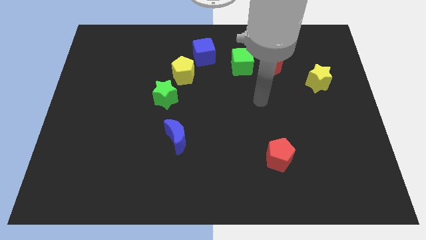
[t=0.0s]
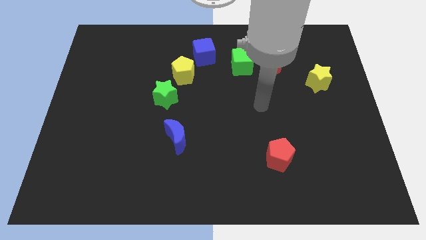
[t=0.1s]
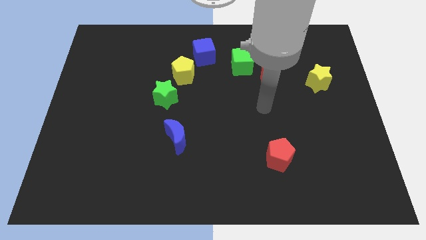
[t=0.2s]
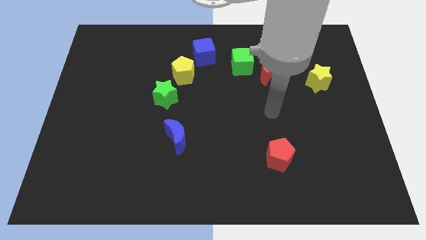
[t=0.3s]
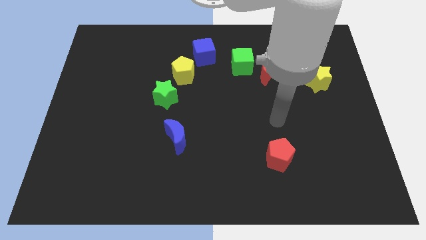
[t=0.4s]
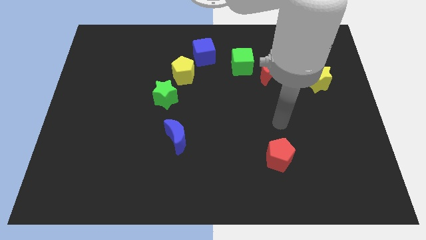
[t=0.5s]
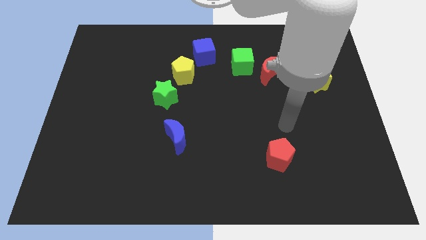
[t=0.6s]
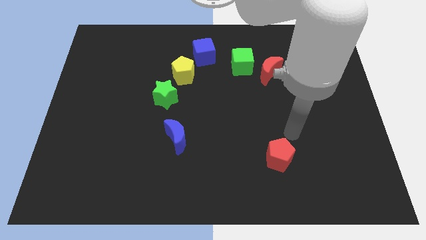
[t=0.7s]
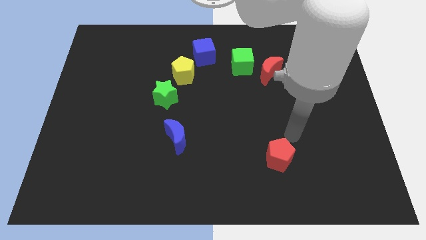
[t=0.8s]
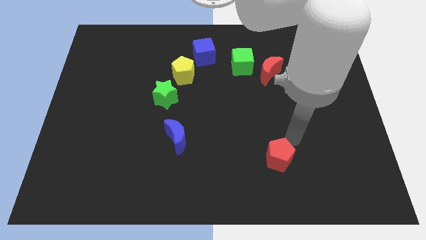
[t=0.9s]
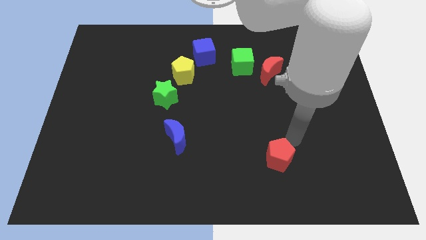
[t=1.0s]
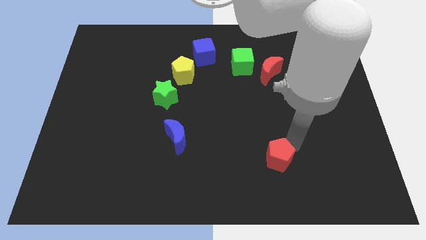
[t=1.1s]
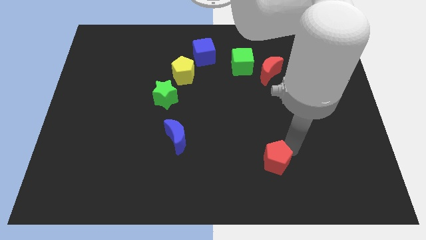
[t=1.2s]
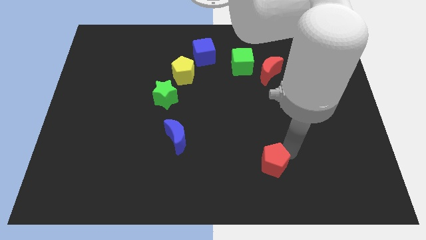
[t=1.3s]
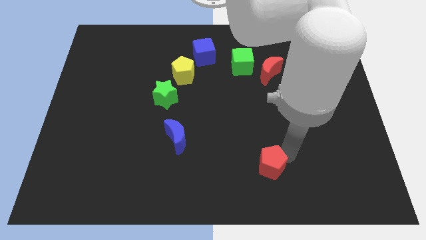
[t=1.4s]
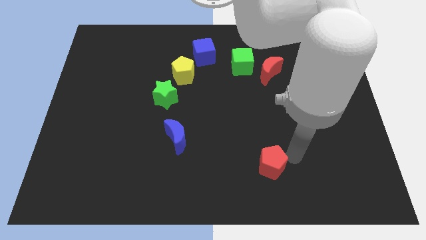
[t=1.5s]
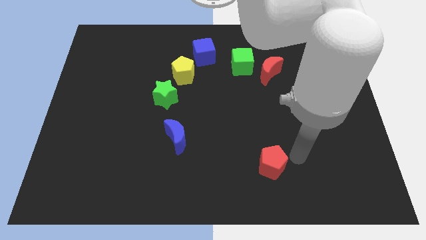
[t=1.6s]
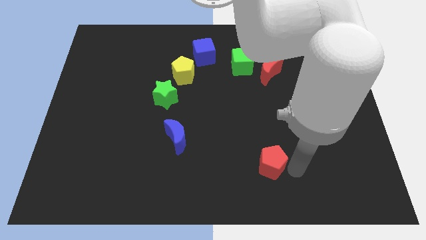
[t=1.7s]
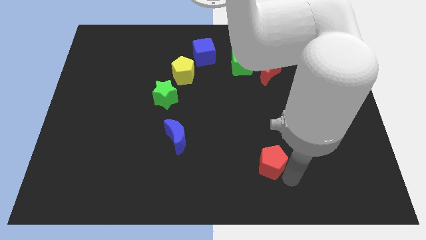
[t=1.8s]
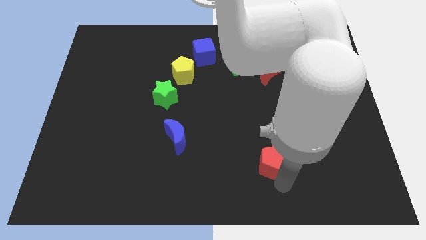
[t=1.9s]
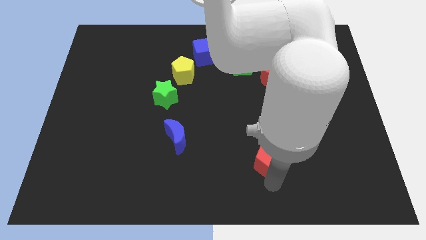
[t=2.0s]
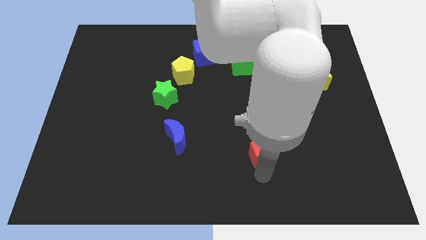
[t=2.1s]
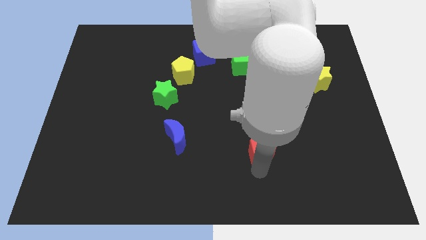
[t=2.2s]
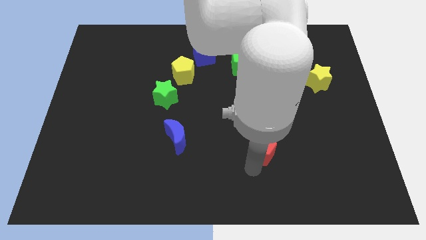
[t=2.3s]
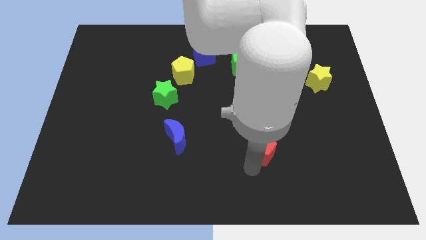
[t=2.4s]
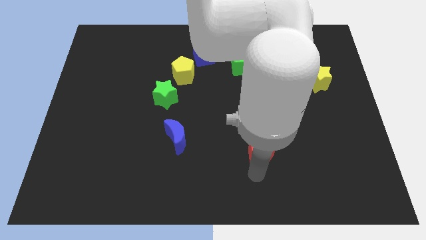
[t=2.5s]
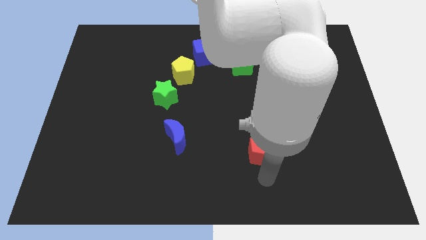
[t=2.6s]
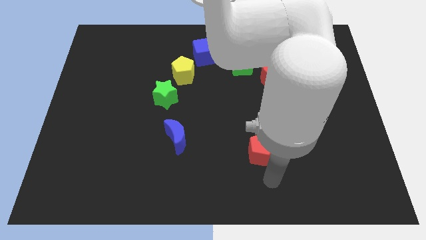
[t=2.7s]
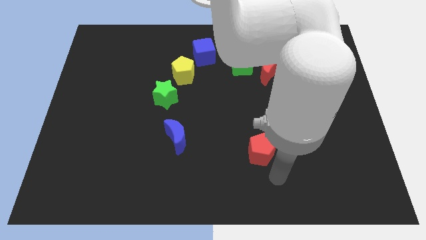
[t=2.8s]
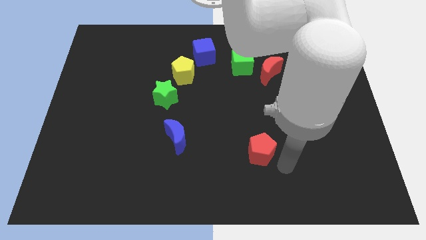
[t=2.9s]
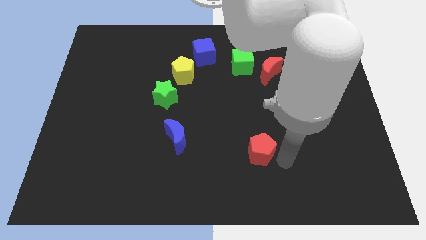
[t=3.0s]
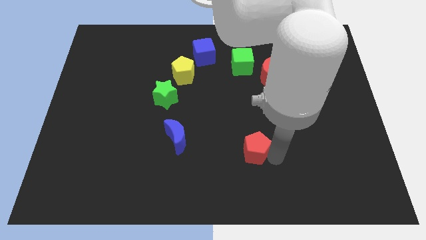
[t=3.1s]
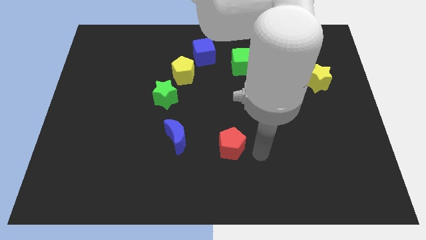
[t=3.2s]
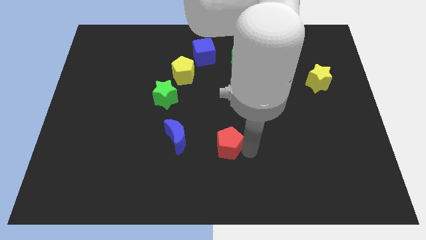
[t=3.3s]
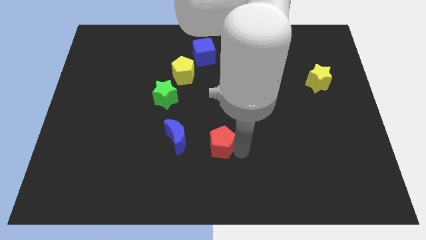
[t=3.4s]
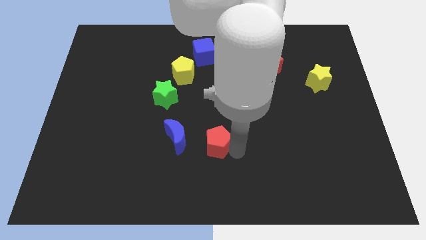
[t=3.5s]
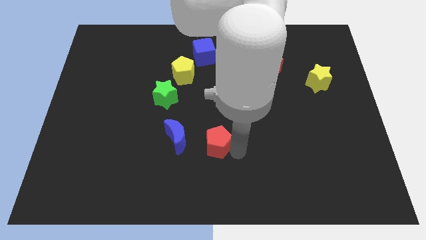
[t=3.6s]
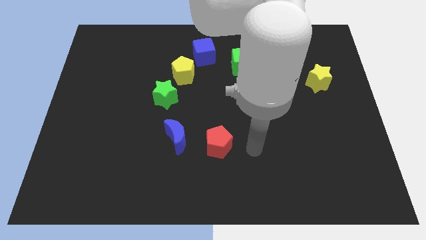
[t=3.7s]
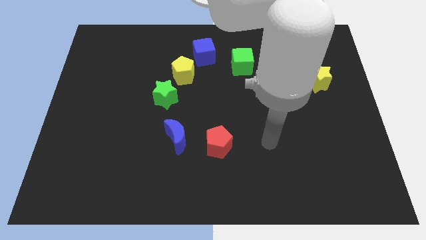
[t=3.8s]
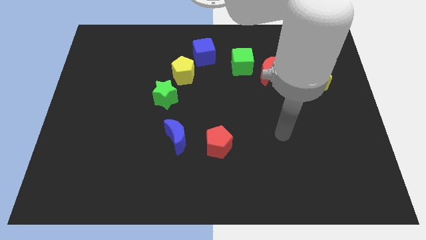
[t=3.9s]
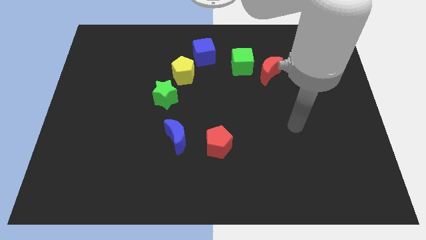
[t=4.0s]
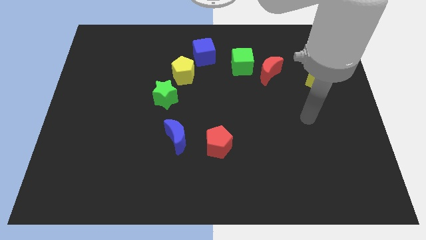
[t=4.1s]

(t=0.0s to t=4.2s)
place the red pentagon right to the blue moon

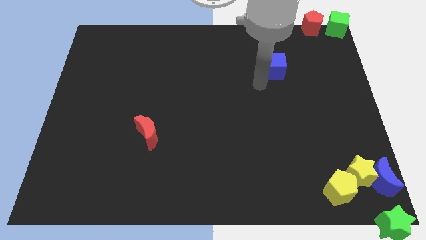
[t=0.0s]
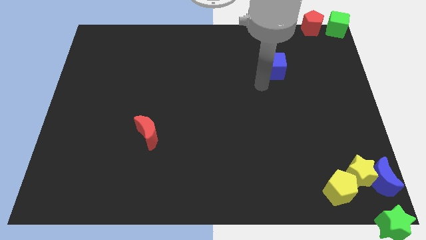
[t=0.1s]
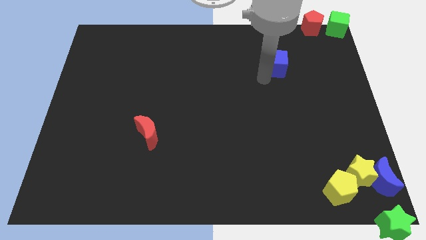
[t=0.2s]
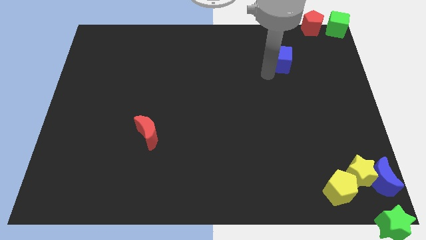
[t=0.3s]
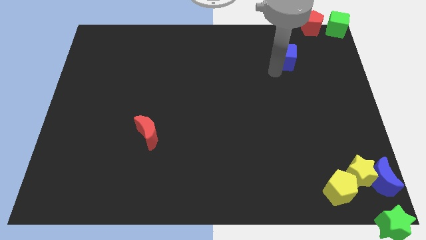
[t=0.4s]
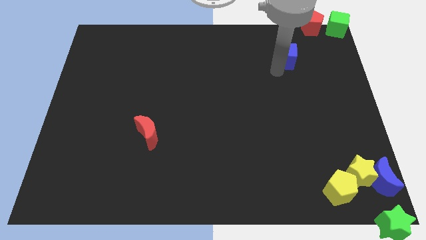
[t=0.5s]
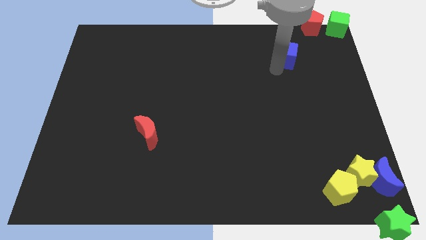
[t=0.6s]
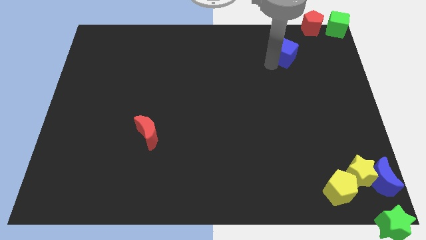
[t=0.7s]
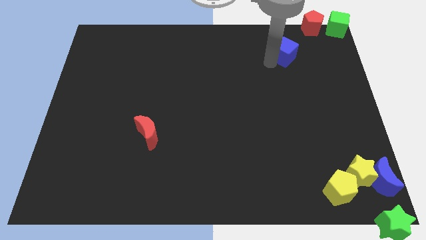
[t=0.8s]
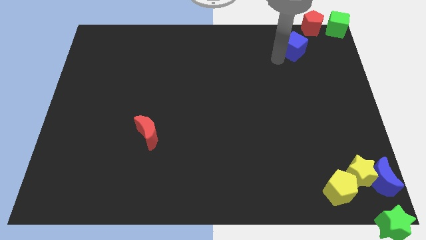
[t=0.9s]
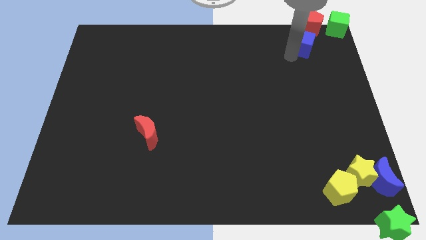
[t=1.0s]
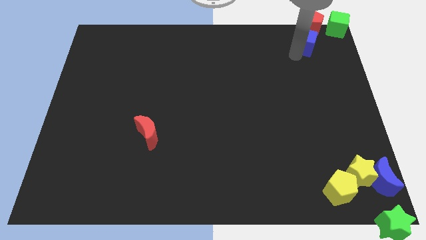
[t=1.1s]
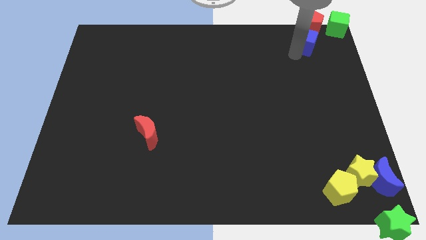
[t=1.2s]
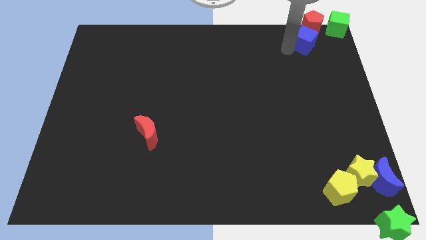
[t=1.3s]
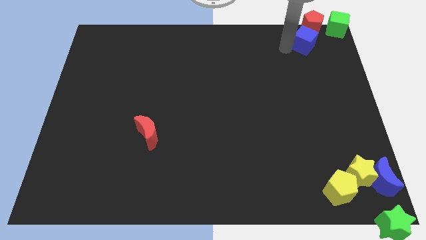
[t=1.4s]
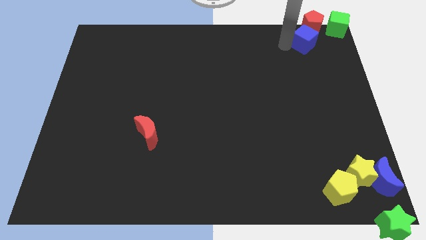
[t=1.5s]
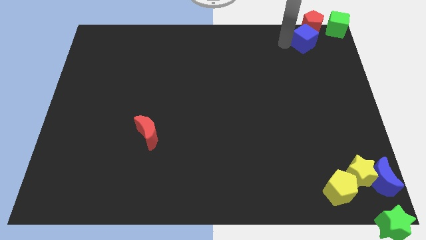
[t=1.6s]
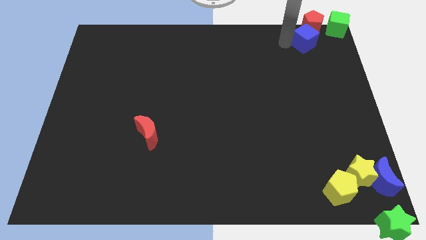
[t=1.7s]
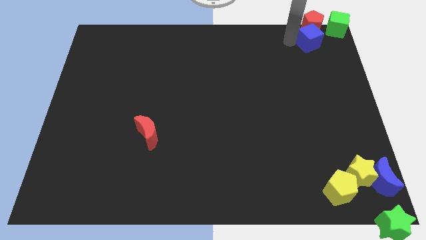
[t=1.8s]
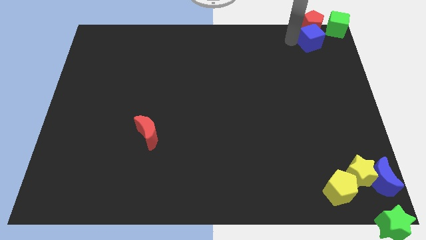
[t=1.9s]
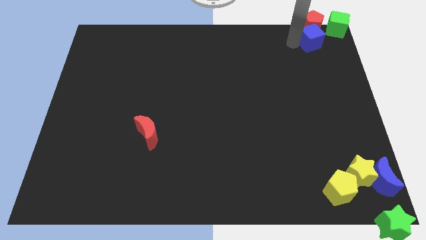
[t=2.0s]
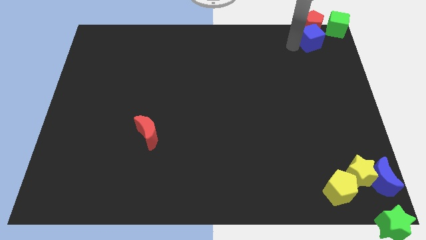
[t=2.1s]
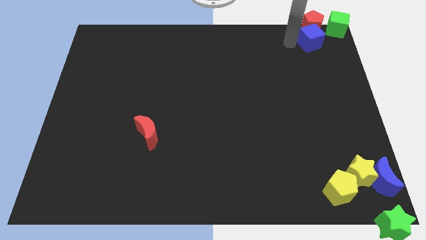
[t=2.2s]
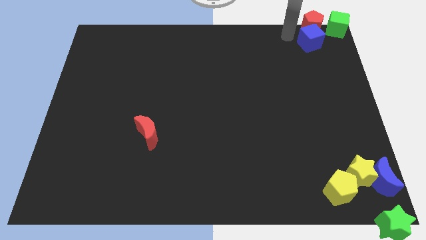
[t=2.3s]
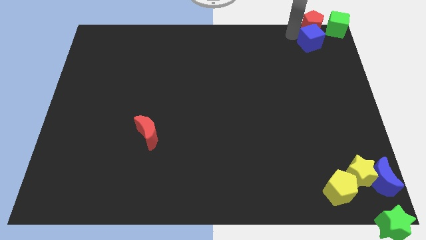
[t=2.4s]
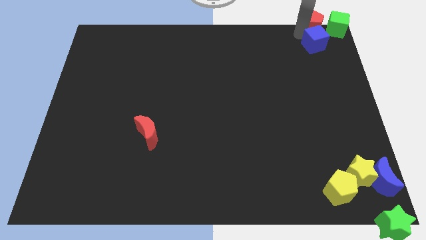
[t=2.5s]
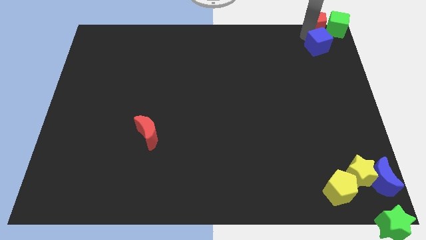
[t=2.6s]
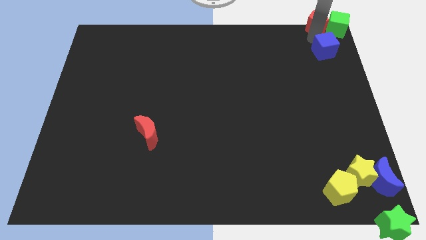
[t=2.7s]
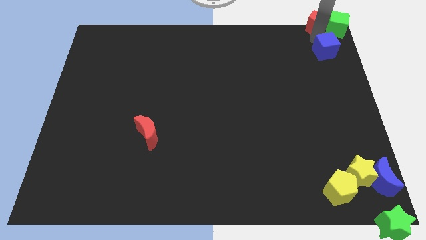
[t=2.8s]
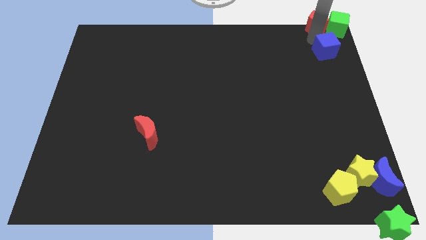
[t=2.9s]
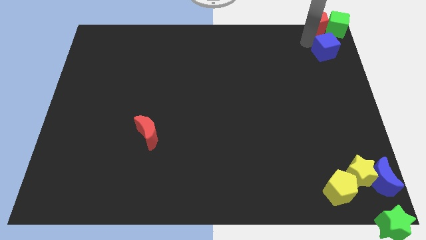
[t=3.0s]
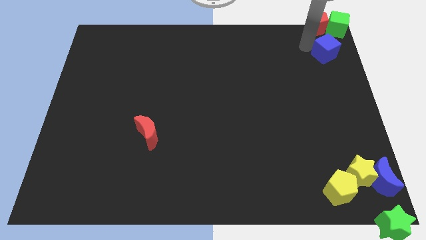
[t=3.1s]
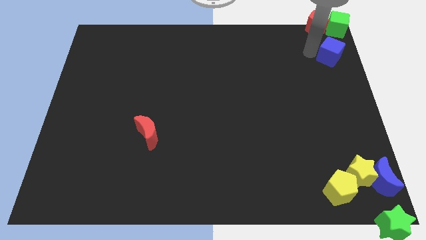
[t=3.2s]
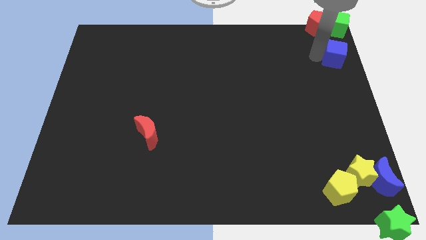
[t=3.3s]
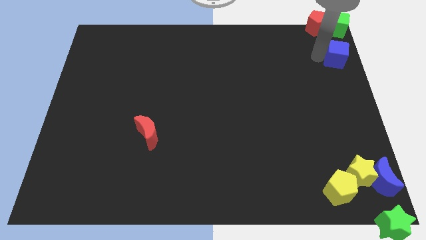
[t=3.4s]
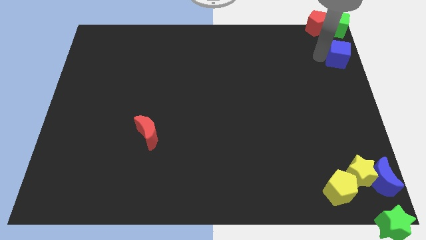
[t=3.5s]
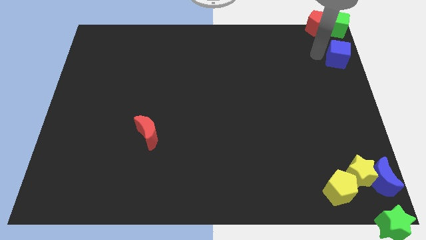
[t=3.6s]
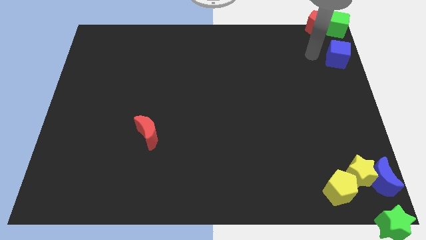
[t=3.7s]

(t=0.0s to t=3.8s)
push the blue cube to the bottom side of the green cube

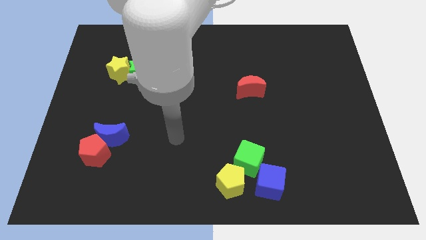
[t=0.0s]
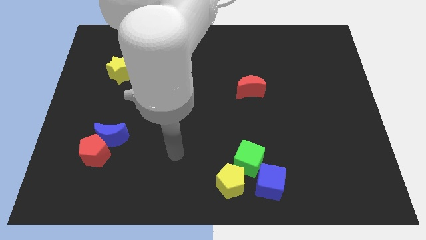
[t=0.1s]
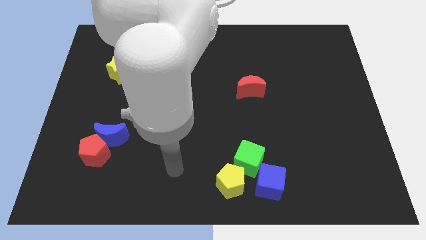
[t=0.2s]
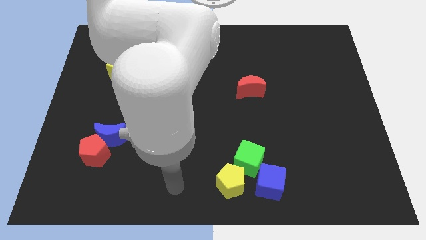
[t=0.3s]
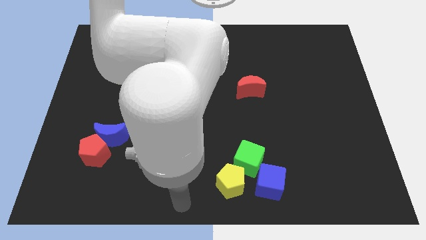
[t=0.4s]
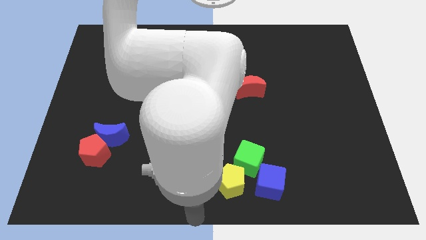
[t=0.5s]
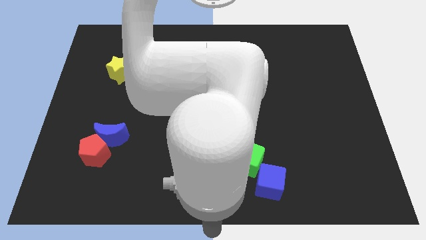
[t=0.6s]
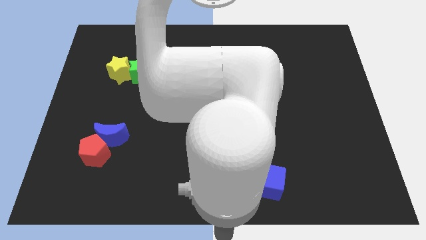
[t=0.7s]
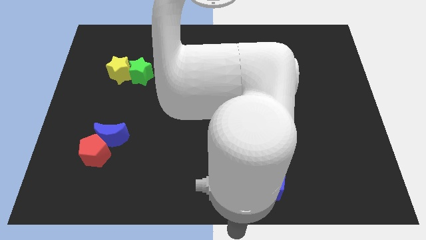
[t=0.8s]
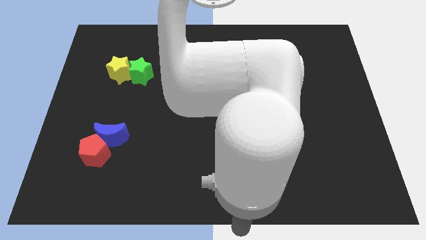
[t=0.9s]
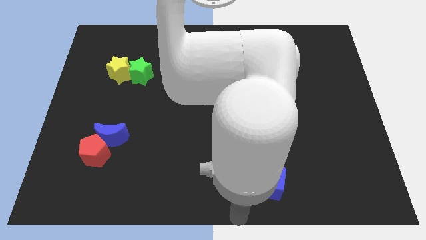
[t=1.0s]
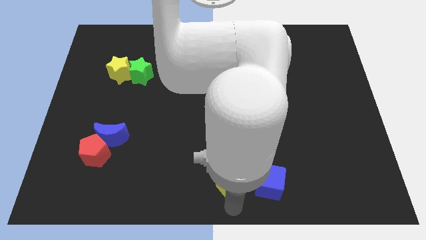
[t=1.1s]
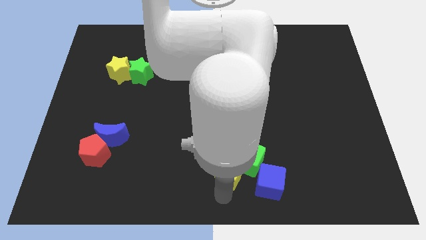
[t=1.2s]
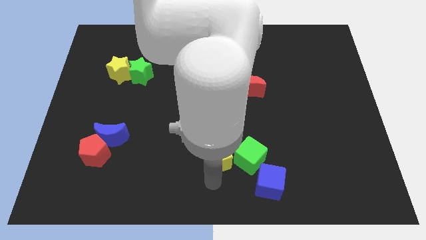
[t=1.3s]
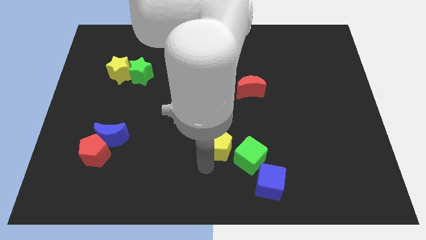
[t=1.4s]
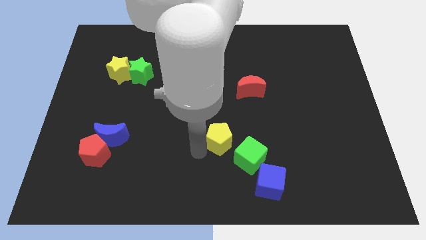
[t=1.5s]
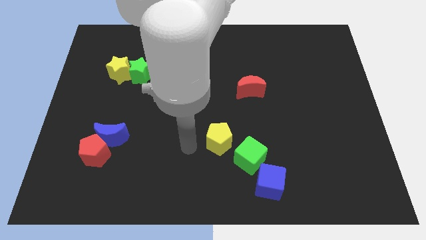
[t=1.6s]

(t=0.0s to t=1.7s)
push yellow pentagon diagonal to the green cube
